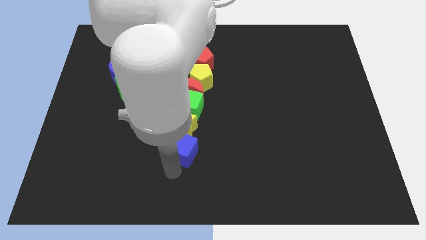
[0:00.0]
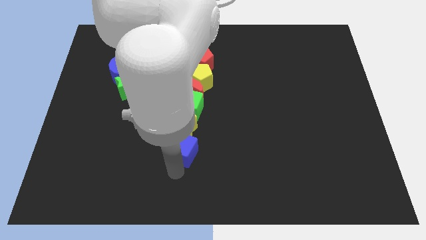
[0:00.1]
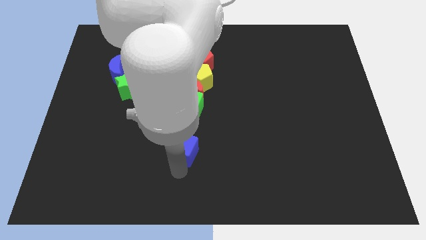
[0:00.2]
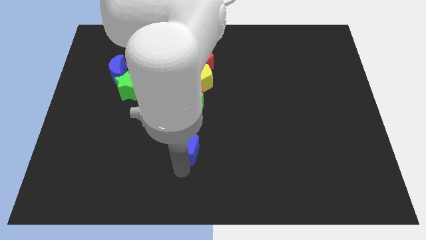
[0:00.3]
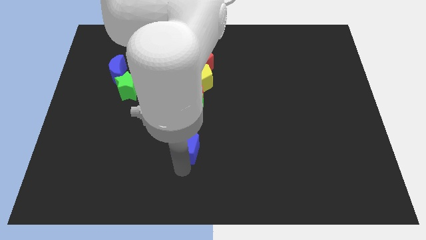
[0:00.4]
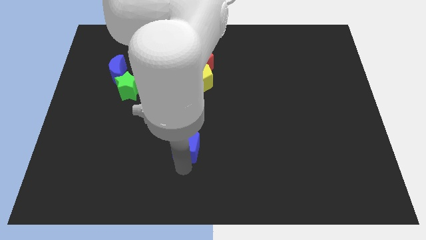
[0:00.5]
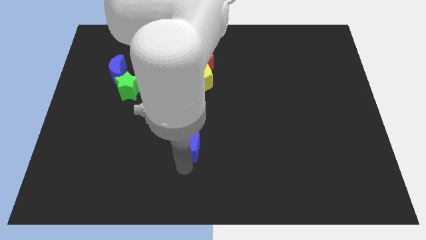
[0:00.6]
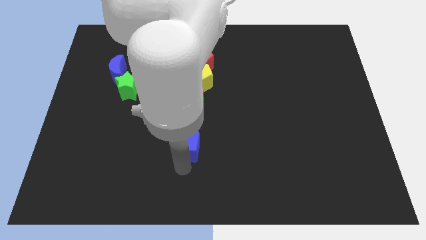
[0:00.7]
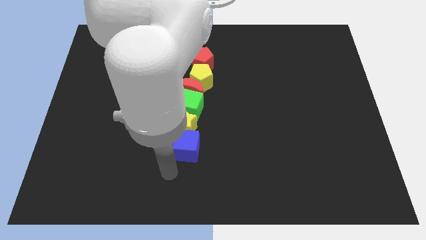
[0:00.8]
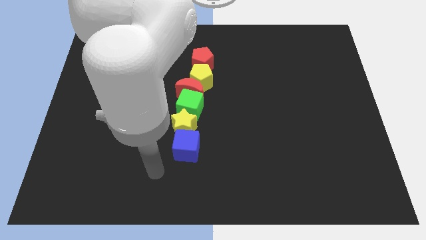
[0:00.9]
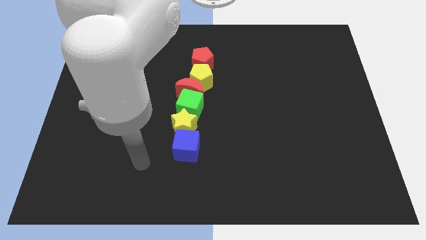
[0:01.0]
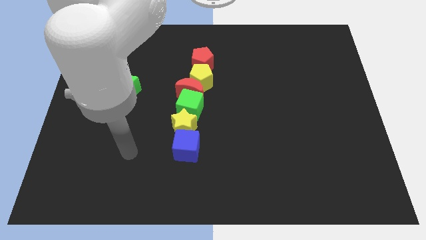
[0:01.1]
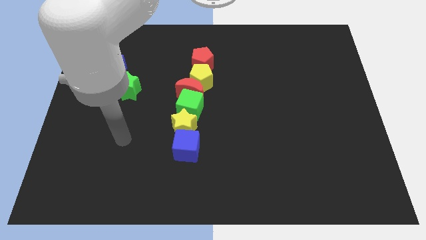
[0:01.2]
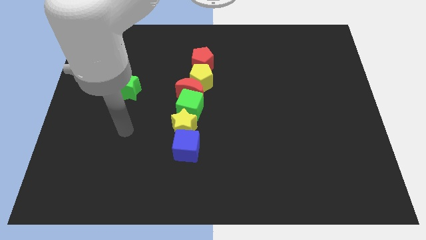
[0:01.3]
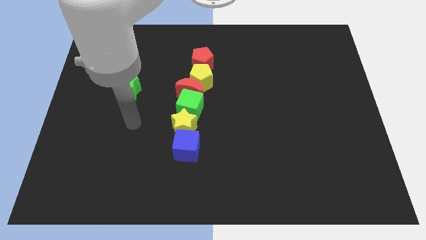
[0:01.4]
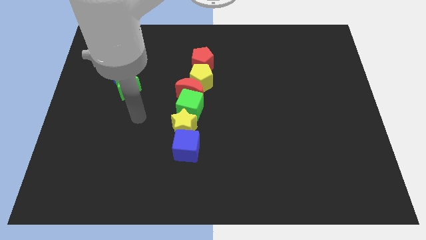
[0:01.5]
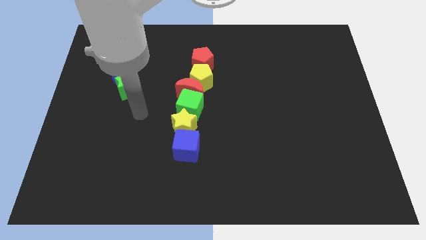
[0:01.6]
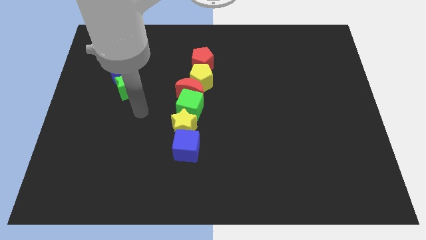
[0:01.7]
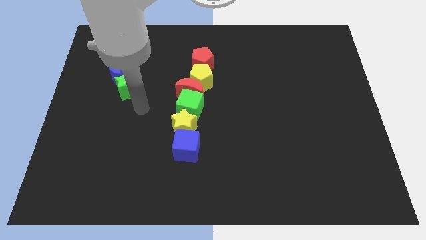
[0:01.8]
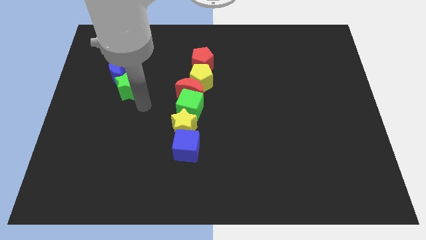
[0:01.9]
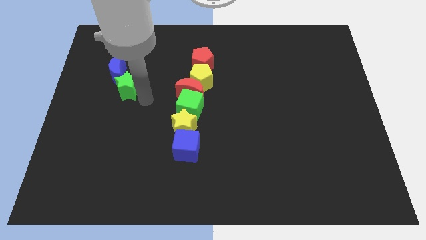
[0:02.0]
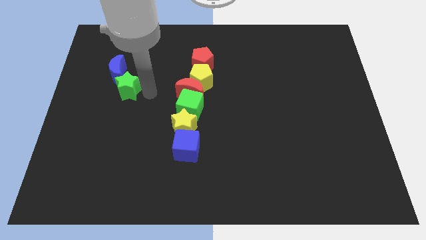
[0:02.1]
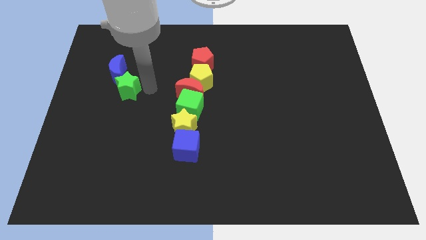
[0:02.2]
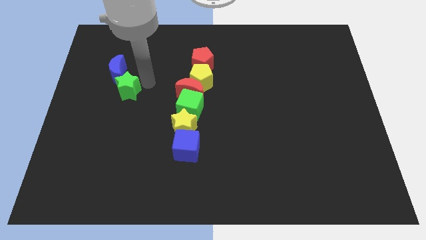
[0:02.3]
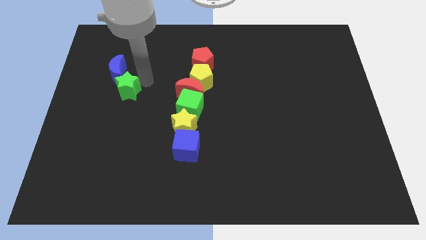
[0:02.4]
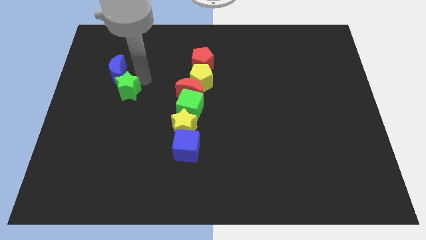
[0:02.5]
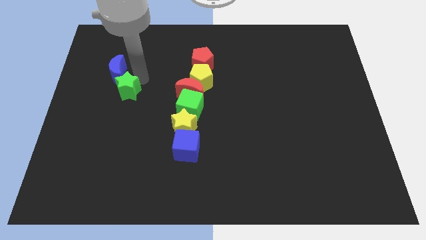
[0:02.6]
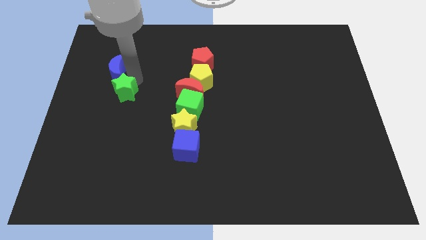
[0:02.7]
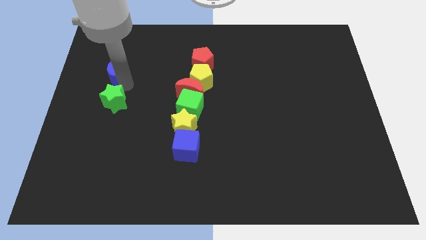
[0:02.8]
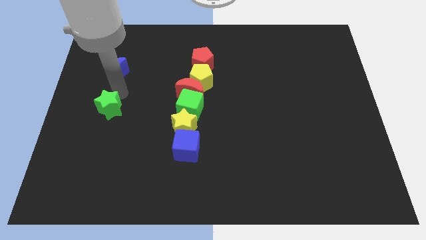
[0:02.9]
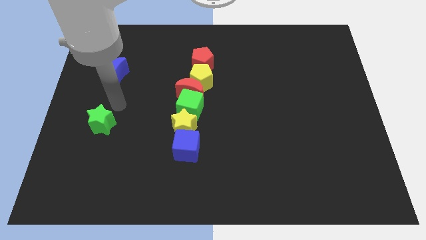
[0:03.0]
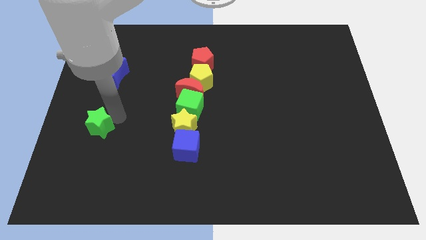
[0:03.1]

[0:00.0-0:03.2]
separate green star from blue moon

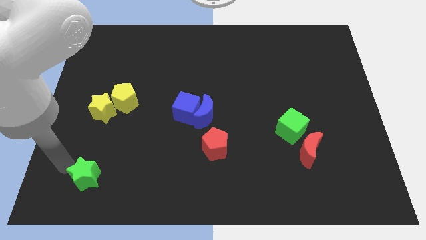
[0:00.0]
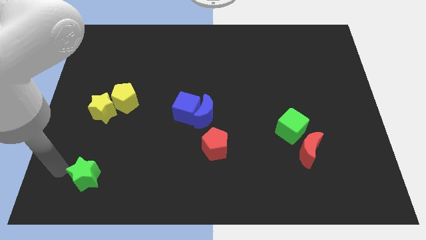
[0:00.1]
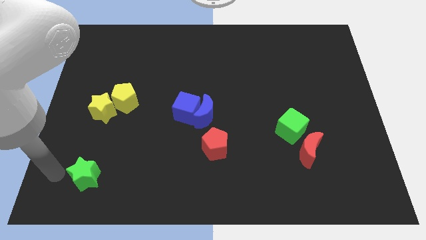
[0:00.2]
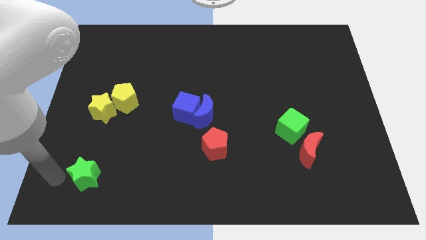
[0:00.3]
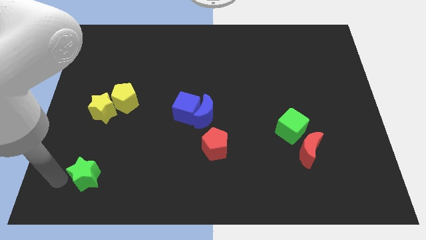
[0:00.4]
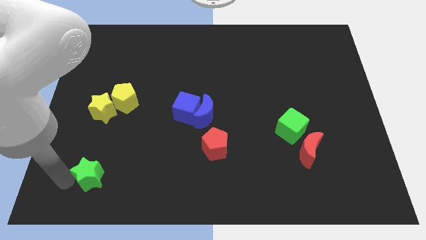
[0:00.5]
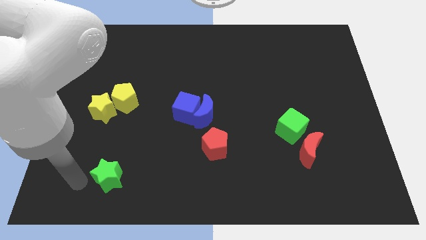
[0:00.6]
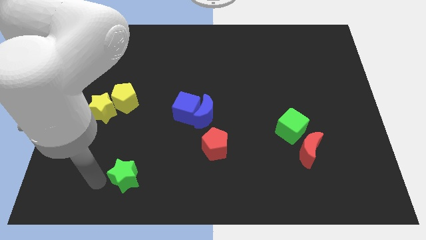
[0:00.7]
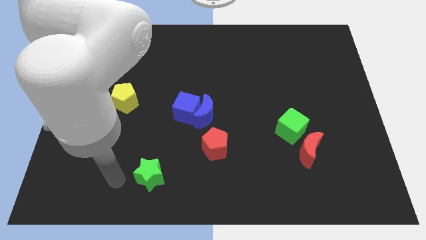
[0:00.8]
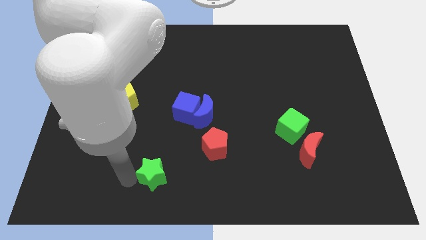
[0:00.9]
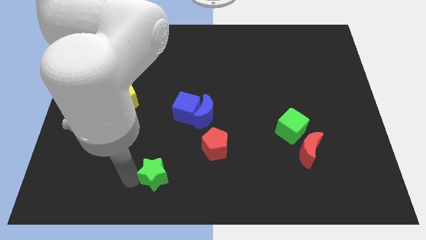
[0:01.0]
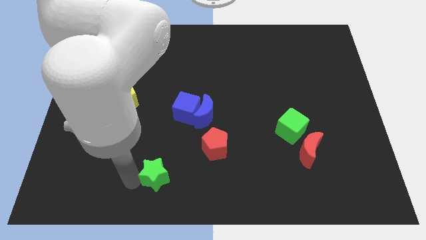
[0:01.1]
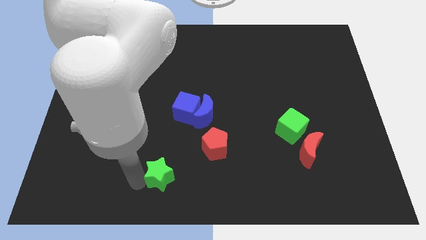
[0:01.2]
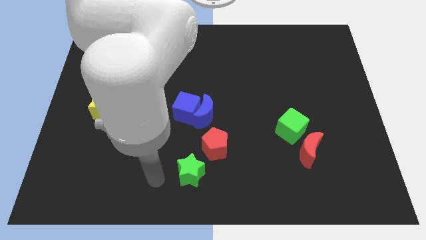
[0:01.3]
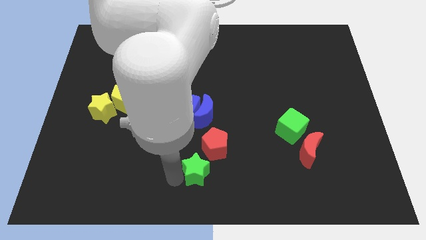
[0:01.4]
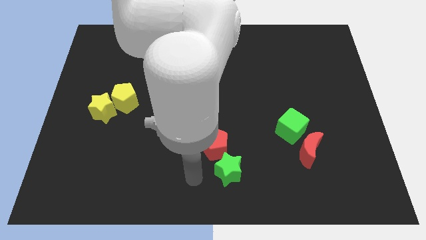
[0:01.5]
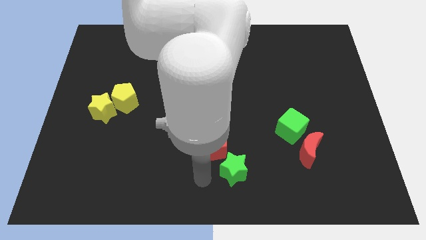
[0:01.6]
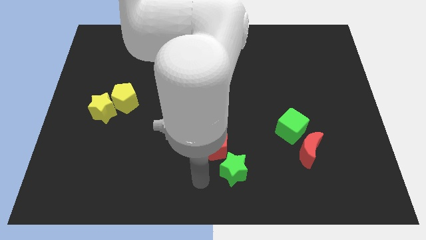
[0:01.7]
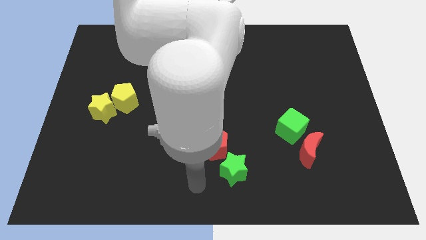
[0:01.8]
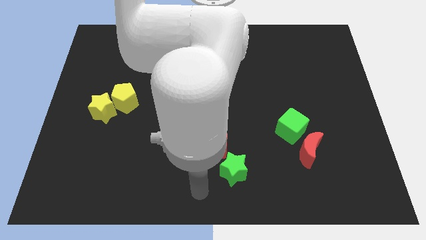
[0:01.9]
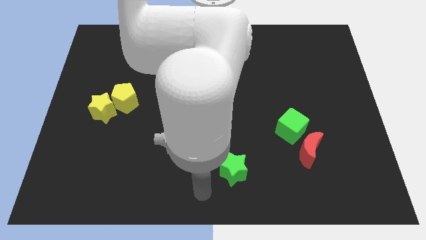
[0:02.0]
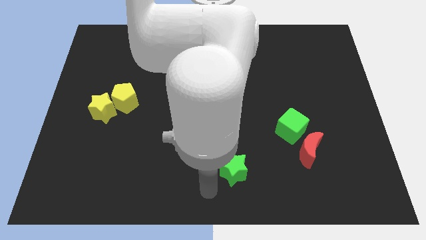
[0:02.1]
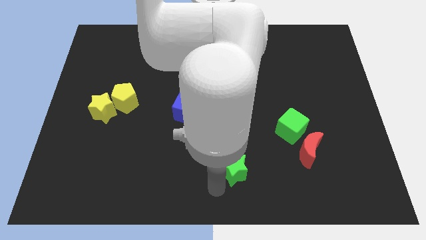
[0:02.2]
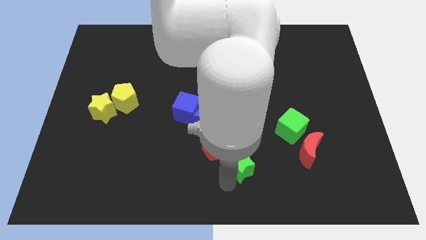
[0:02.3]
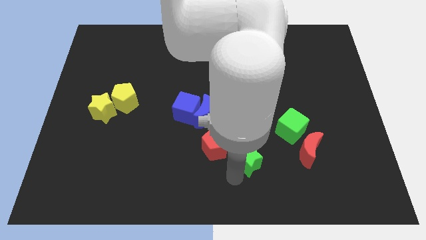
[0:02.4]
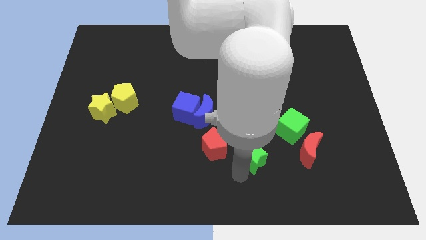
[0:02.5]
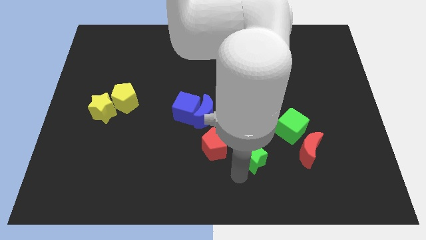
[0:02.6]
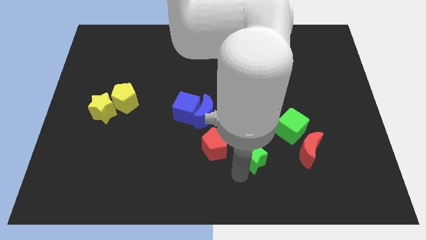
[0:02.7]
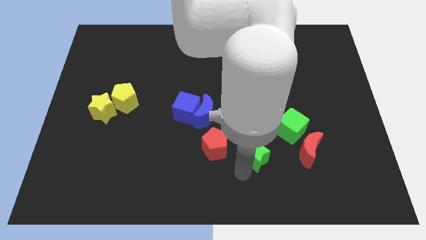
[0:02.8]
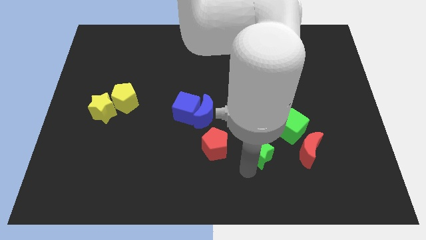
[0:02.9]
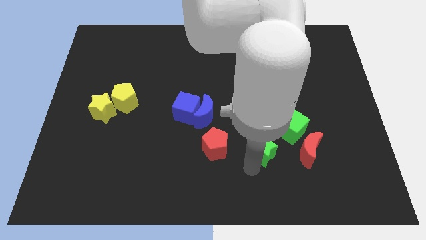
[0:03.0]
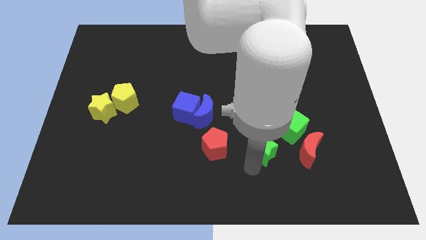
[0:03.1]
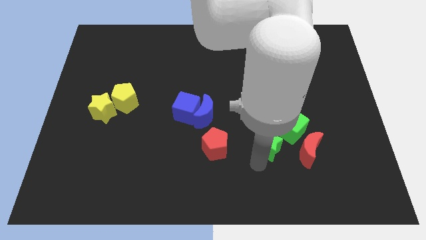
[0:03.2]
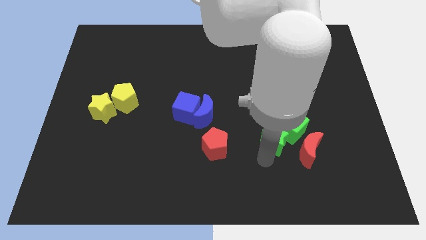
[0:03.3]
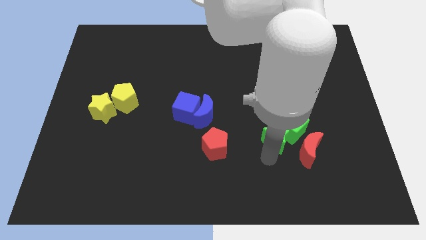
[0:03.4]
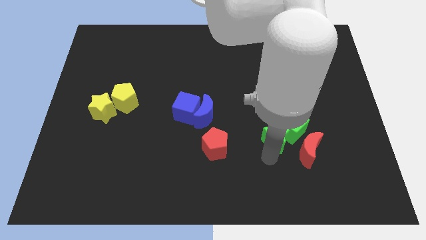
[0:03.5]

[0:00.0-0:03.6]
move the green star to the green cube

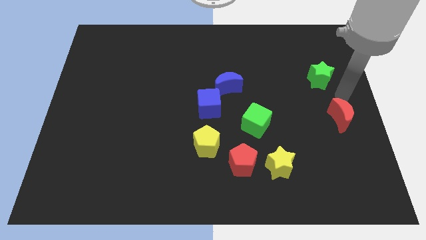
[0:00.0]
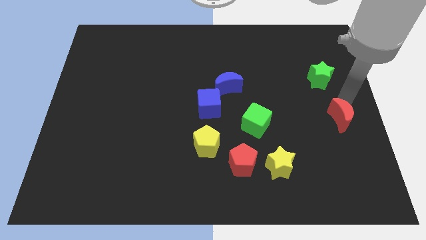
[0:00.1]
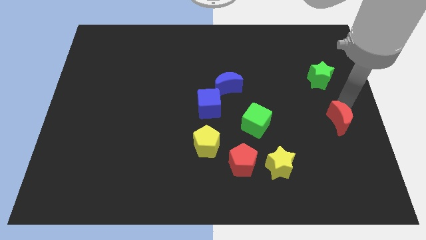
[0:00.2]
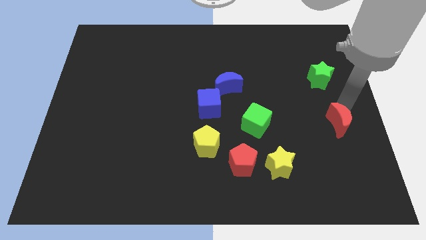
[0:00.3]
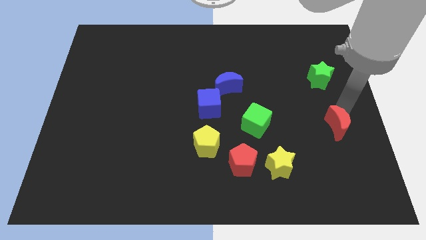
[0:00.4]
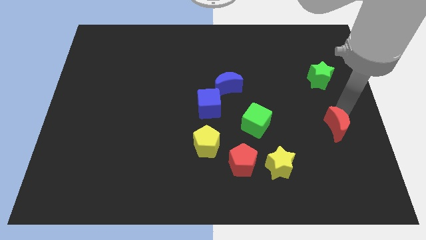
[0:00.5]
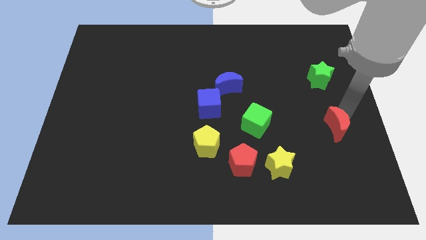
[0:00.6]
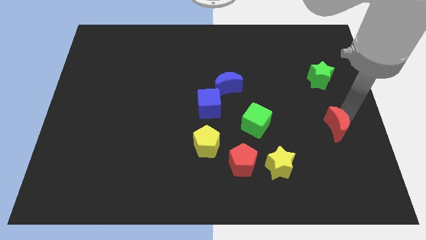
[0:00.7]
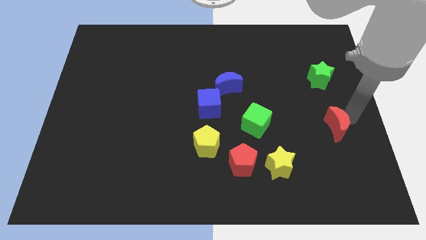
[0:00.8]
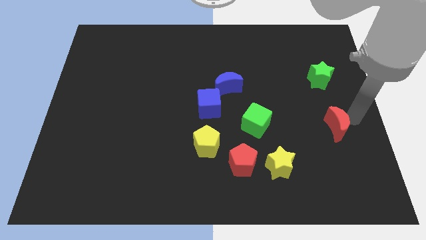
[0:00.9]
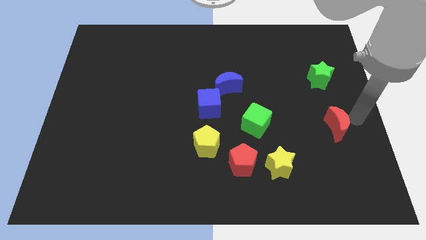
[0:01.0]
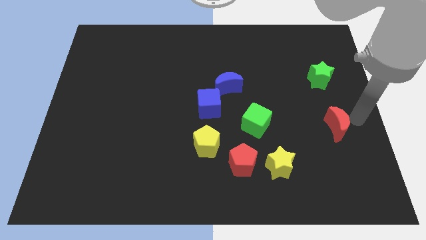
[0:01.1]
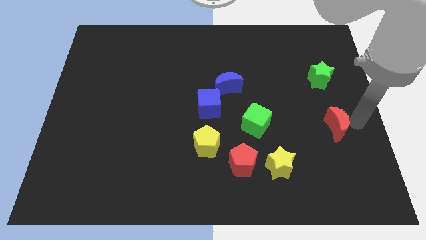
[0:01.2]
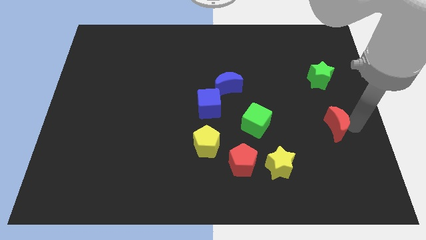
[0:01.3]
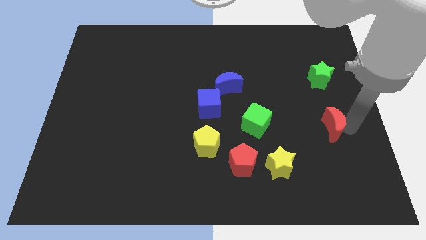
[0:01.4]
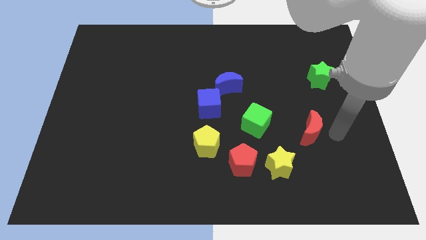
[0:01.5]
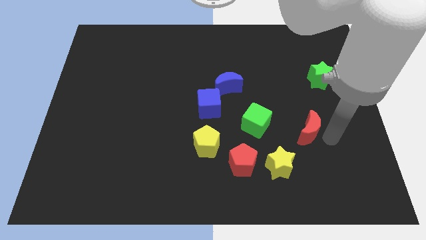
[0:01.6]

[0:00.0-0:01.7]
move the red crescent towards the green cube

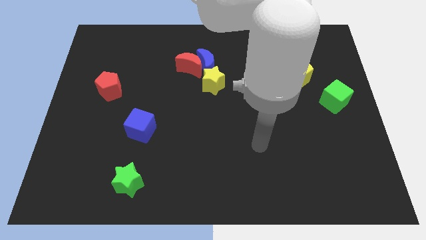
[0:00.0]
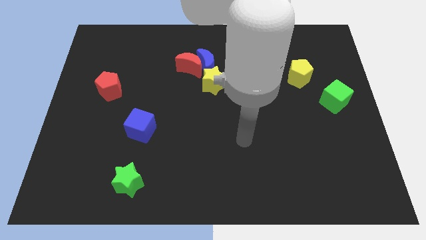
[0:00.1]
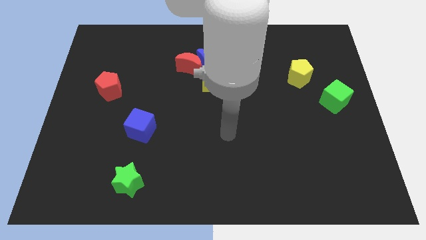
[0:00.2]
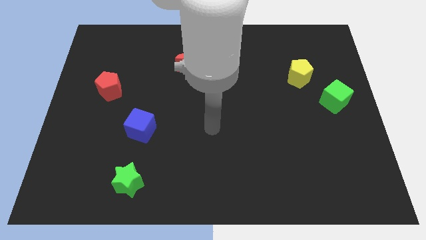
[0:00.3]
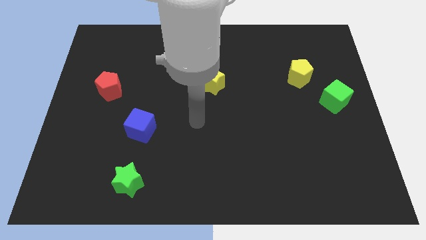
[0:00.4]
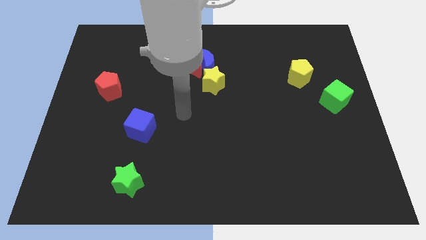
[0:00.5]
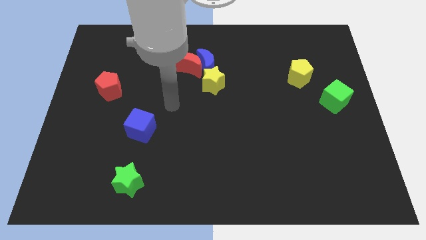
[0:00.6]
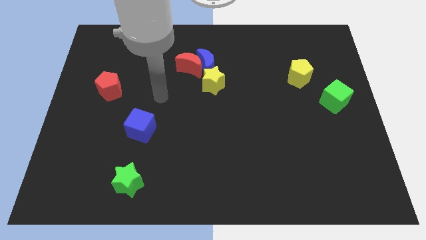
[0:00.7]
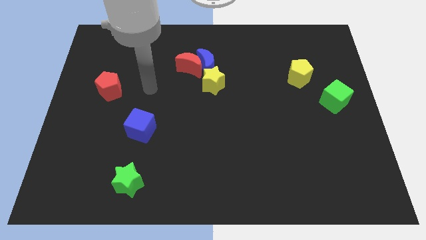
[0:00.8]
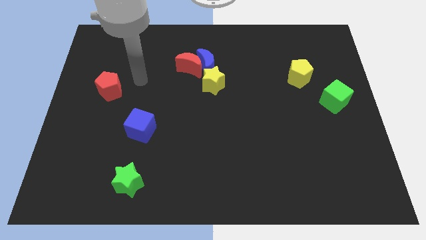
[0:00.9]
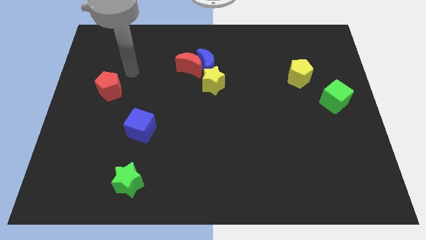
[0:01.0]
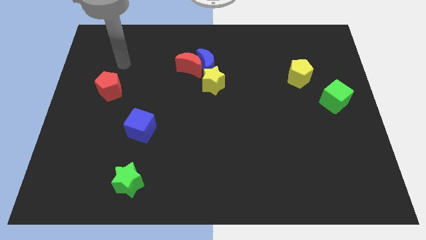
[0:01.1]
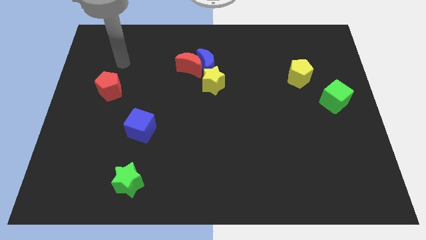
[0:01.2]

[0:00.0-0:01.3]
place your arm to the top of red pentagon
